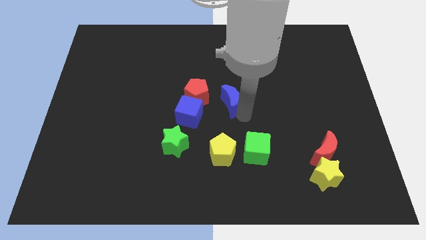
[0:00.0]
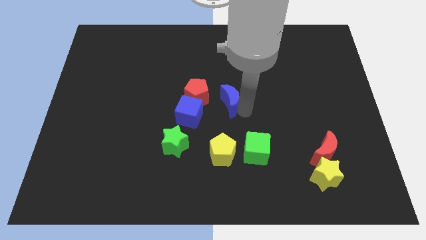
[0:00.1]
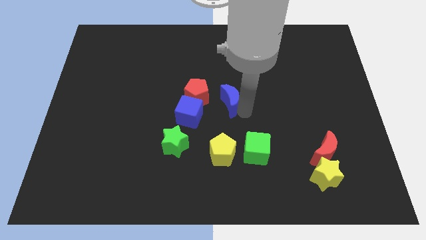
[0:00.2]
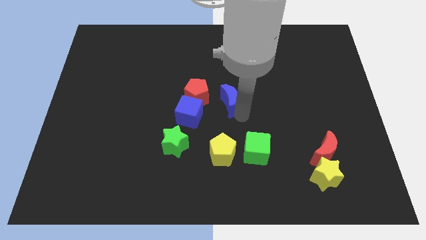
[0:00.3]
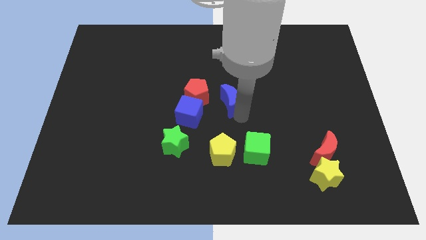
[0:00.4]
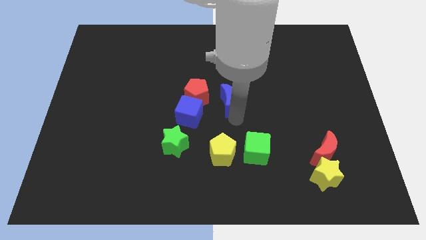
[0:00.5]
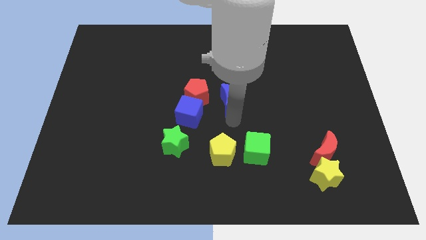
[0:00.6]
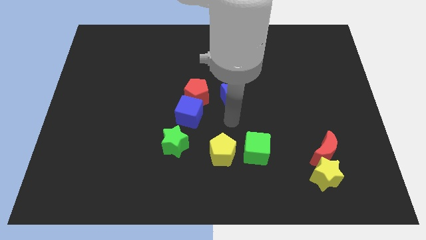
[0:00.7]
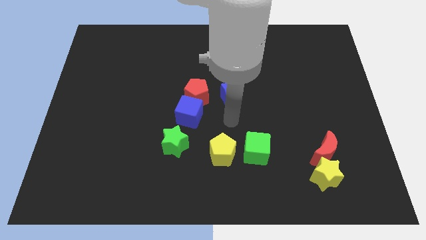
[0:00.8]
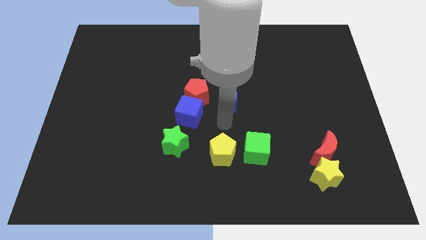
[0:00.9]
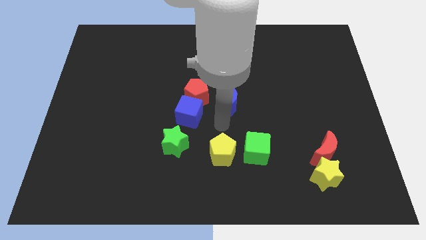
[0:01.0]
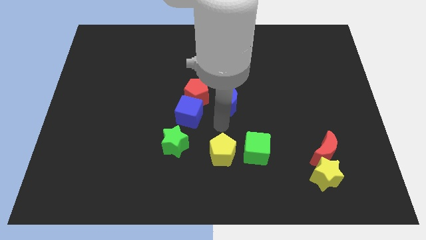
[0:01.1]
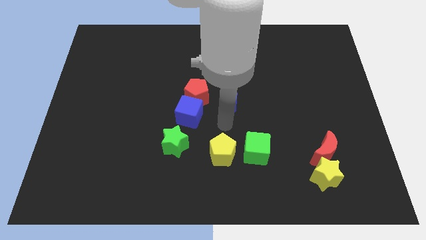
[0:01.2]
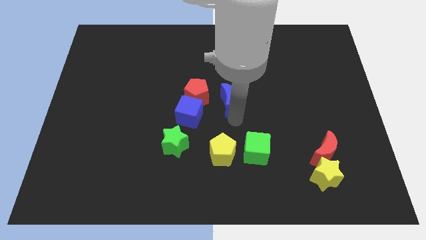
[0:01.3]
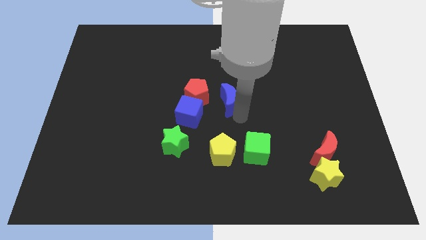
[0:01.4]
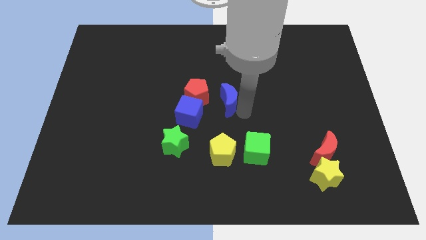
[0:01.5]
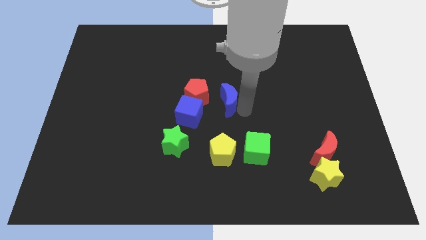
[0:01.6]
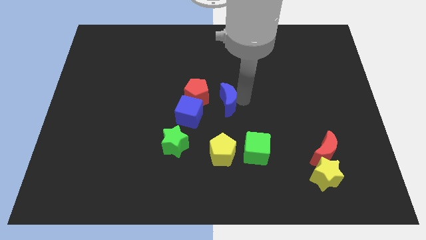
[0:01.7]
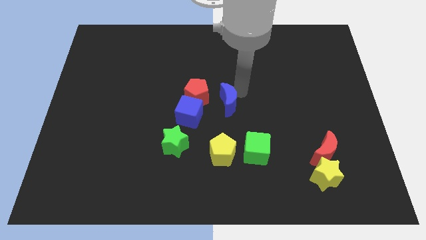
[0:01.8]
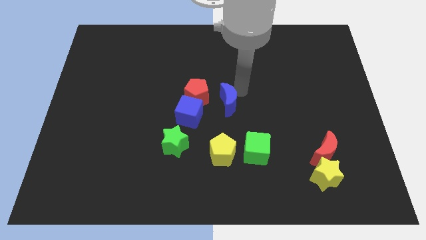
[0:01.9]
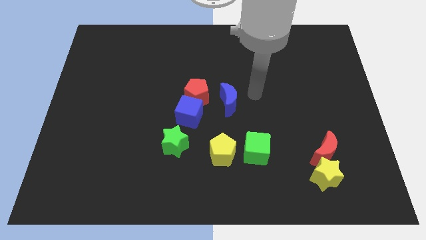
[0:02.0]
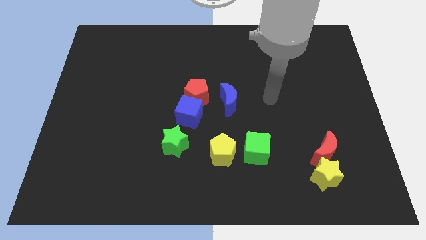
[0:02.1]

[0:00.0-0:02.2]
slightly move the blue moon towards left

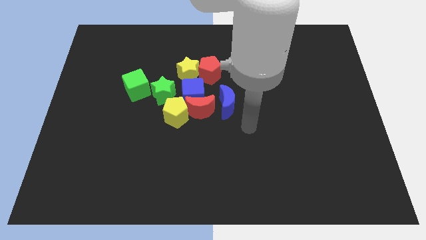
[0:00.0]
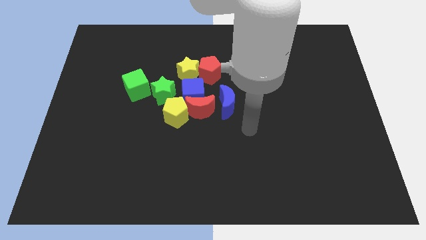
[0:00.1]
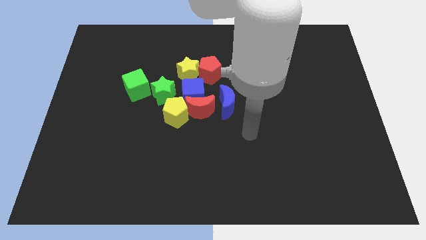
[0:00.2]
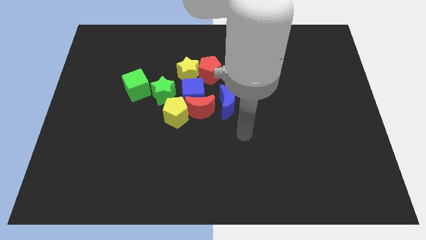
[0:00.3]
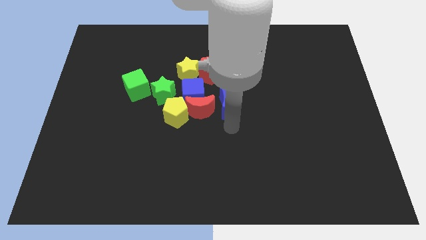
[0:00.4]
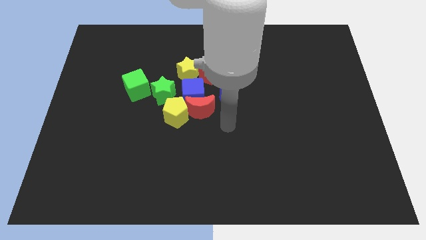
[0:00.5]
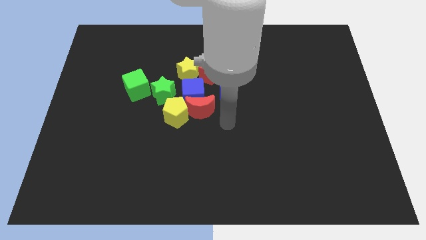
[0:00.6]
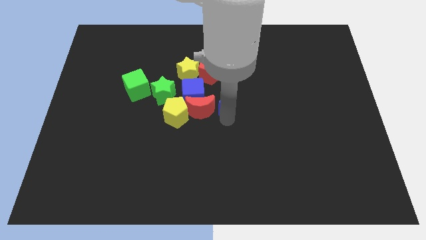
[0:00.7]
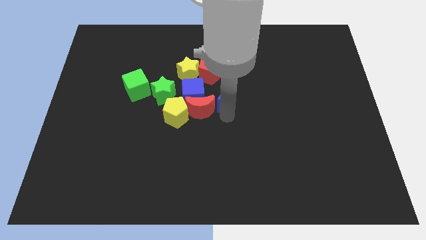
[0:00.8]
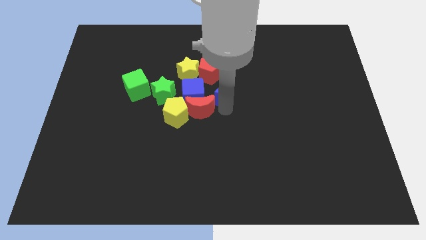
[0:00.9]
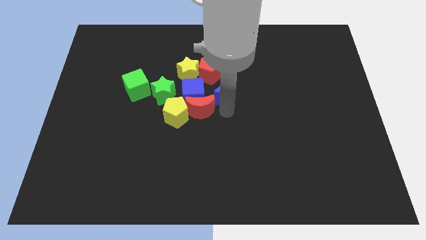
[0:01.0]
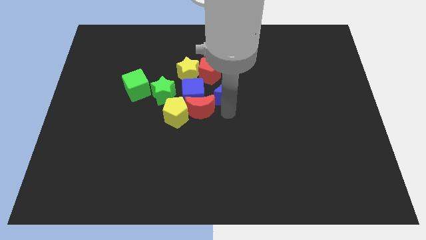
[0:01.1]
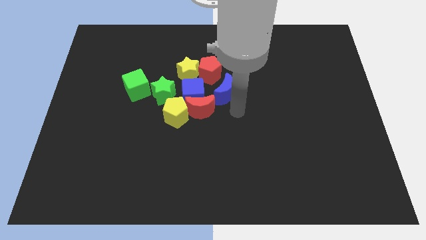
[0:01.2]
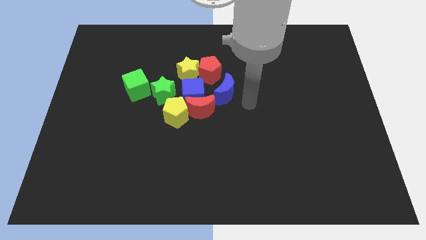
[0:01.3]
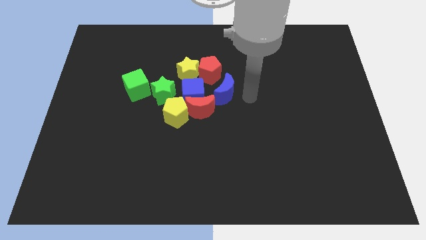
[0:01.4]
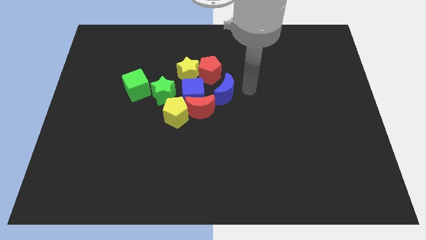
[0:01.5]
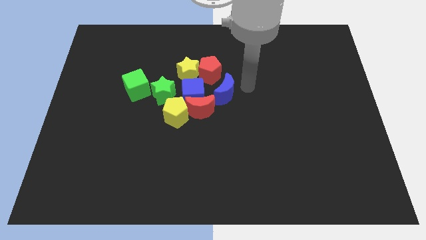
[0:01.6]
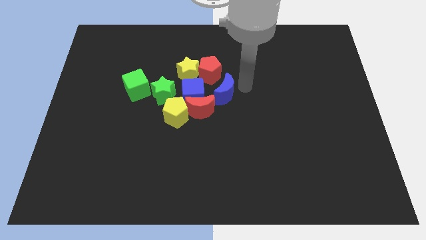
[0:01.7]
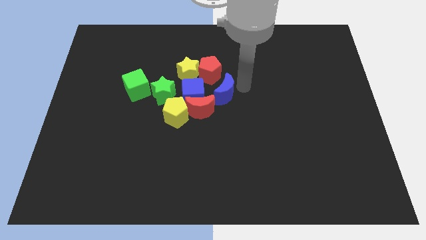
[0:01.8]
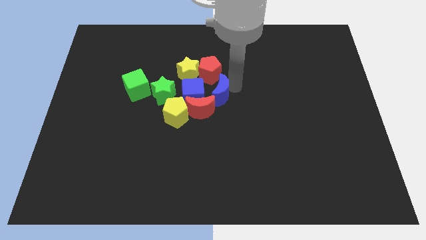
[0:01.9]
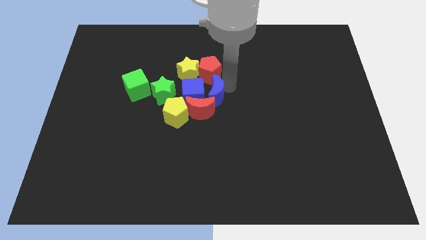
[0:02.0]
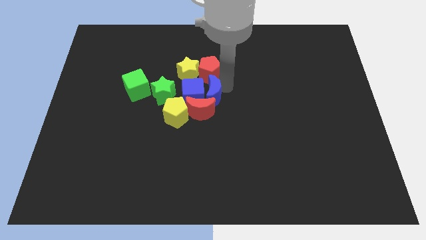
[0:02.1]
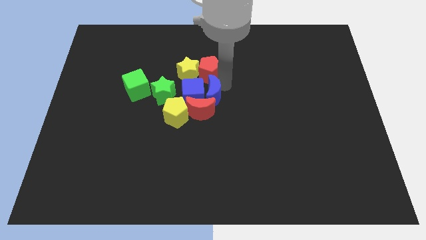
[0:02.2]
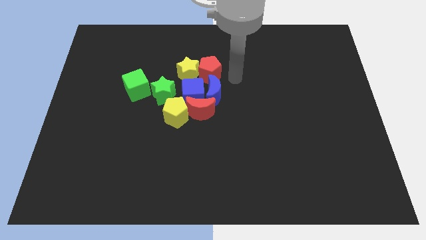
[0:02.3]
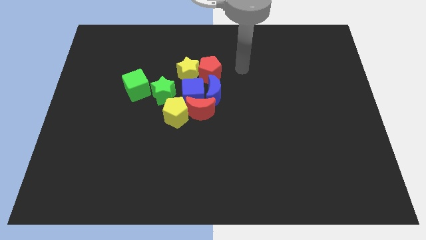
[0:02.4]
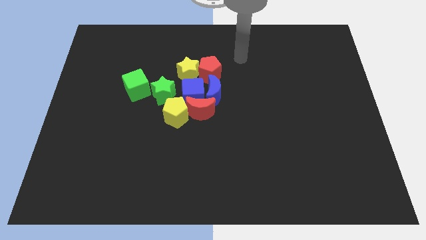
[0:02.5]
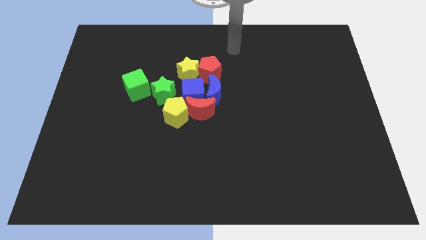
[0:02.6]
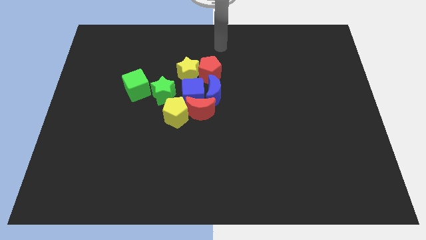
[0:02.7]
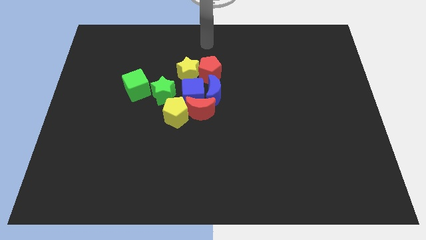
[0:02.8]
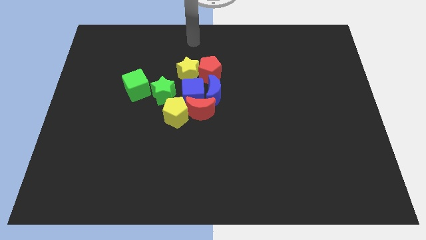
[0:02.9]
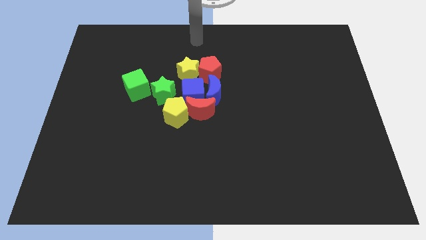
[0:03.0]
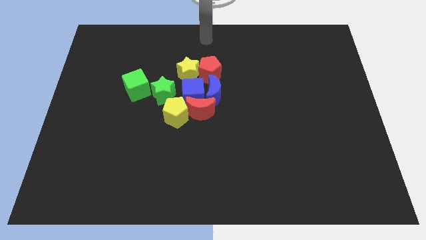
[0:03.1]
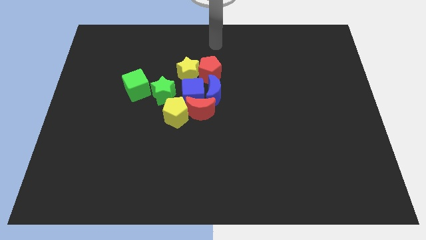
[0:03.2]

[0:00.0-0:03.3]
move the blue crescent towards the right side of the blue cube

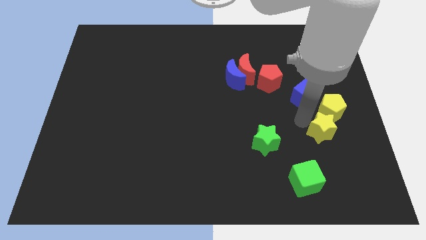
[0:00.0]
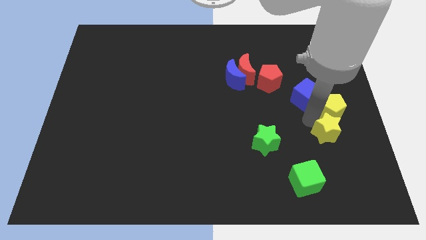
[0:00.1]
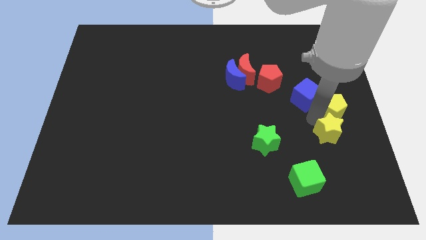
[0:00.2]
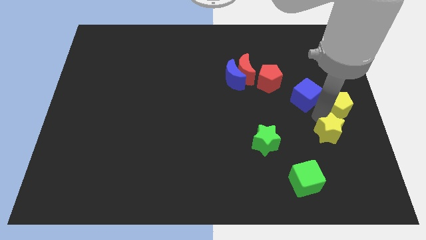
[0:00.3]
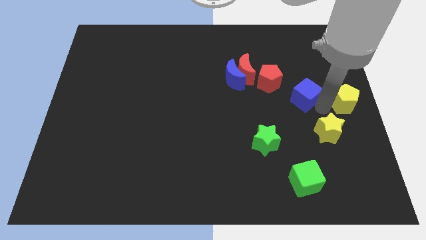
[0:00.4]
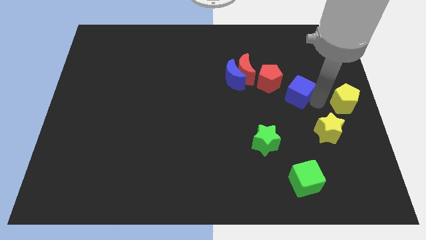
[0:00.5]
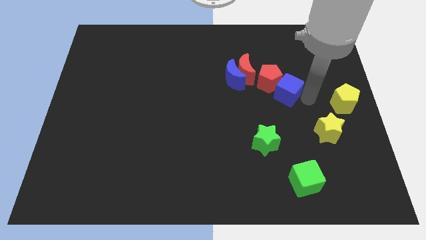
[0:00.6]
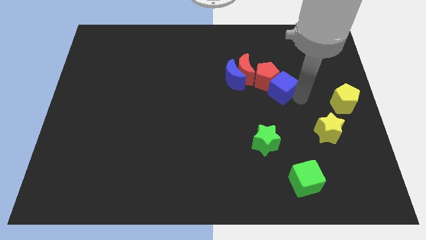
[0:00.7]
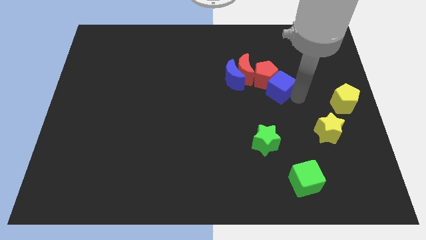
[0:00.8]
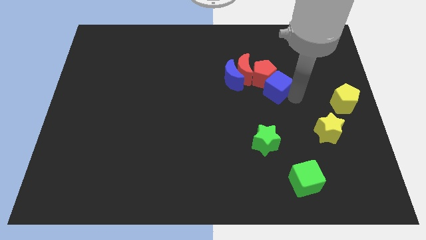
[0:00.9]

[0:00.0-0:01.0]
push the blue cube into red pentagon

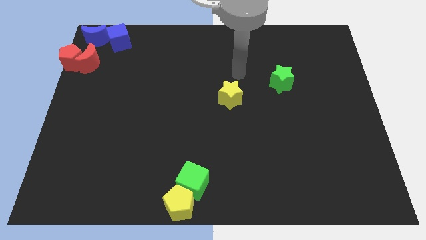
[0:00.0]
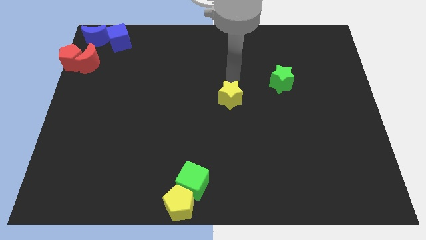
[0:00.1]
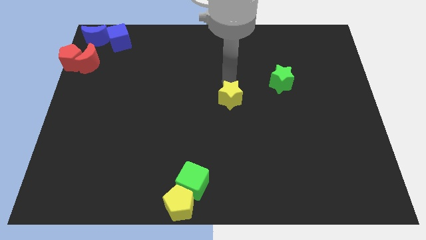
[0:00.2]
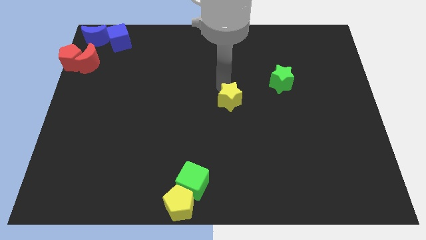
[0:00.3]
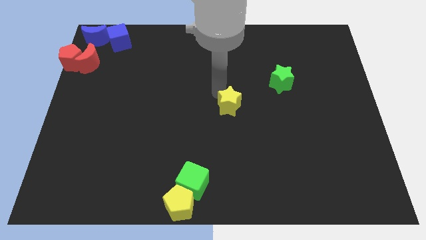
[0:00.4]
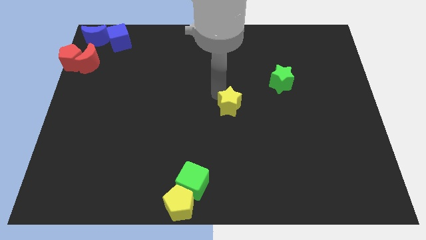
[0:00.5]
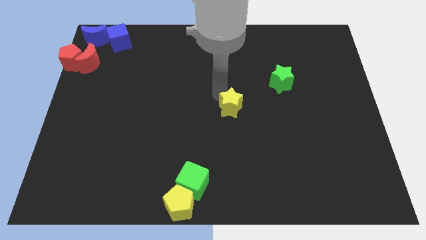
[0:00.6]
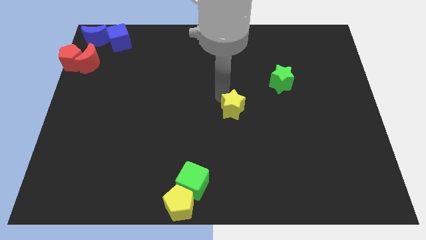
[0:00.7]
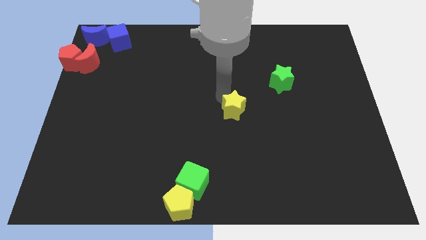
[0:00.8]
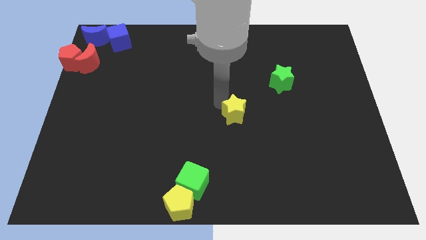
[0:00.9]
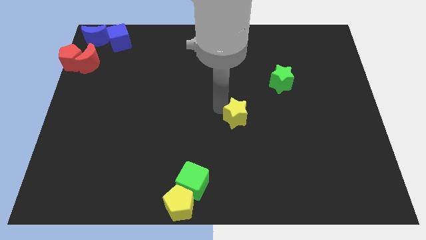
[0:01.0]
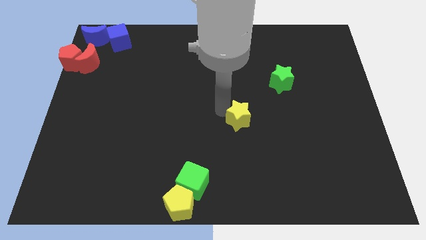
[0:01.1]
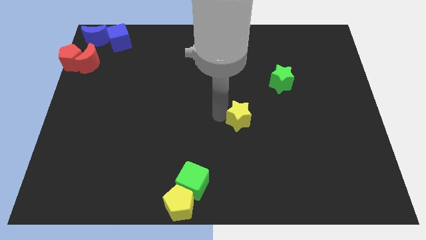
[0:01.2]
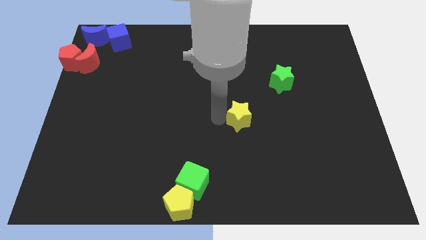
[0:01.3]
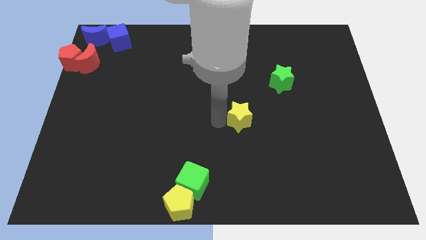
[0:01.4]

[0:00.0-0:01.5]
put the yellow star between the green star and green cube

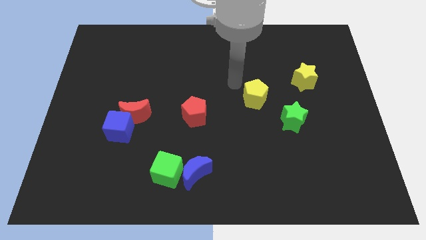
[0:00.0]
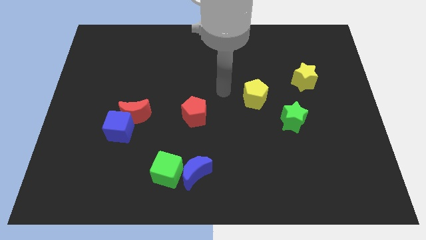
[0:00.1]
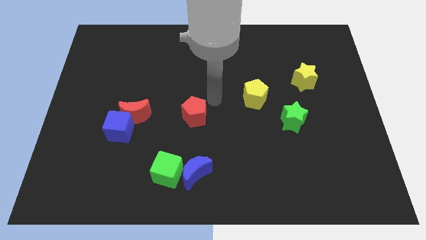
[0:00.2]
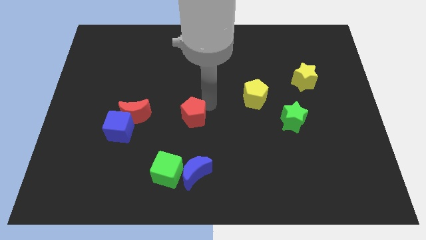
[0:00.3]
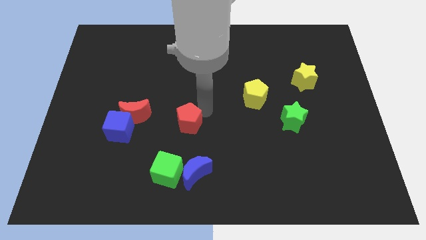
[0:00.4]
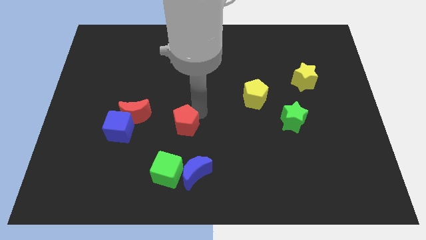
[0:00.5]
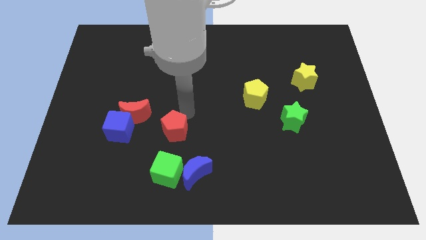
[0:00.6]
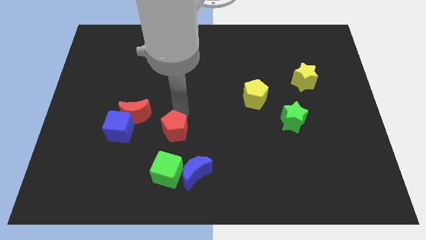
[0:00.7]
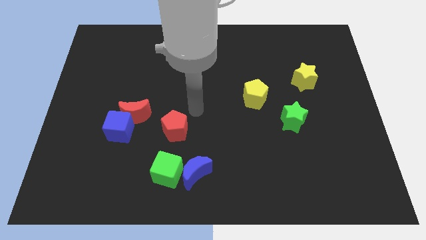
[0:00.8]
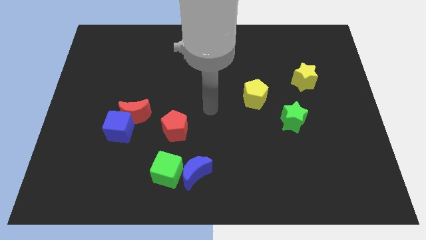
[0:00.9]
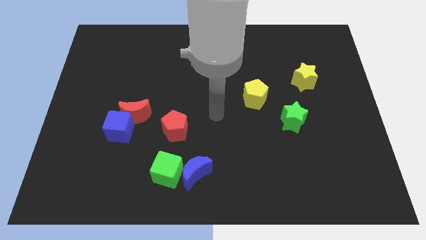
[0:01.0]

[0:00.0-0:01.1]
place the red pentagon to the right of blue cube
